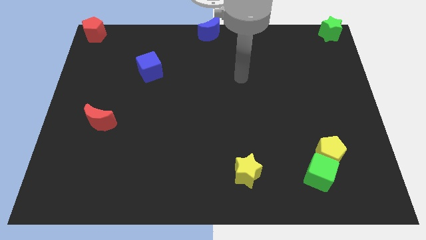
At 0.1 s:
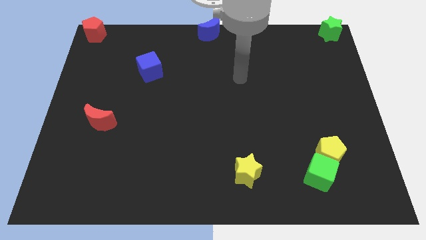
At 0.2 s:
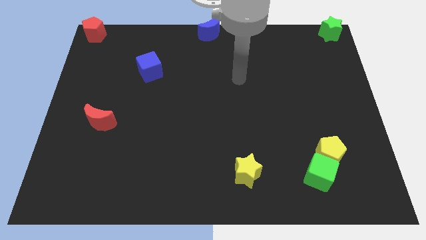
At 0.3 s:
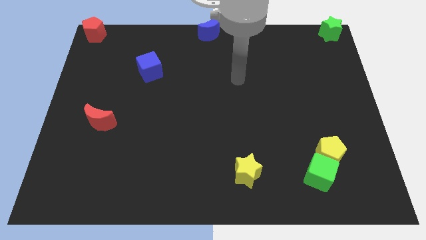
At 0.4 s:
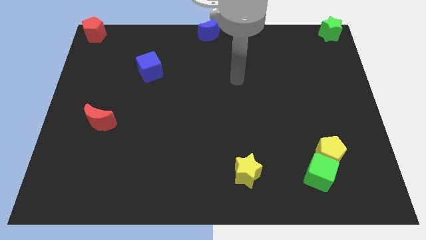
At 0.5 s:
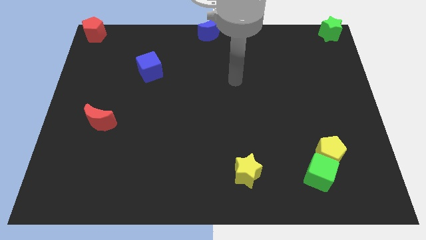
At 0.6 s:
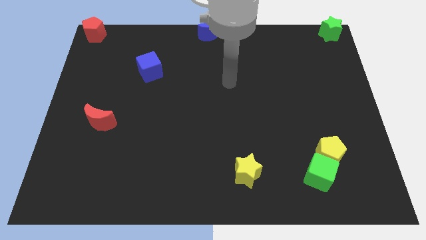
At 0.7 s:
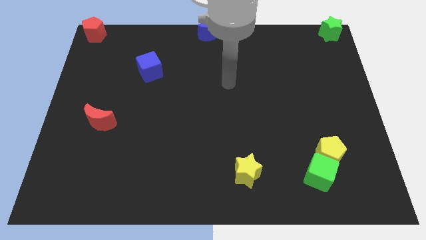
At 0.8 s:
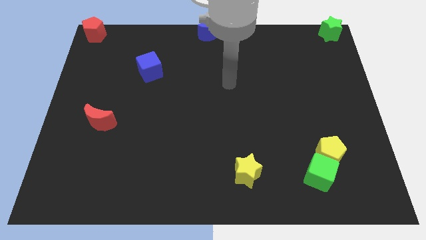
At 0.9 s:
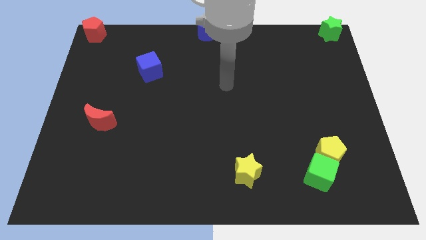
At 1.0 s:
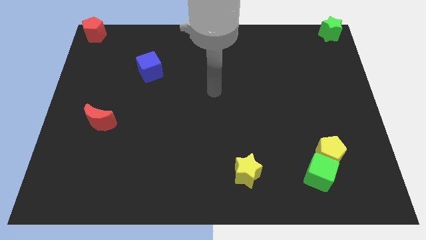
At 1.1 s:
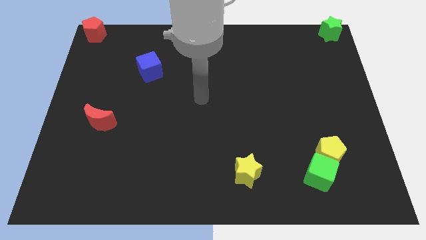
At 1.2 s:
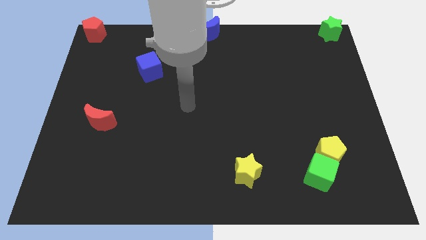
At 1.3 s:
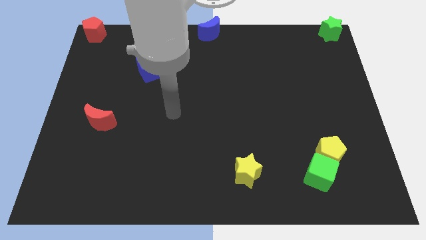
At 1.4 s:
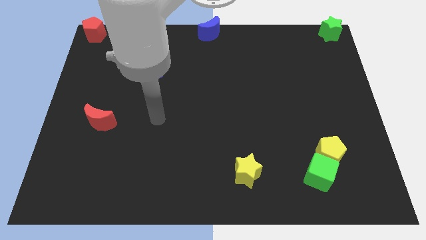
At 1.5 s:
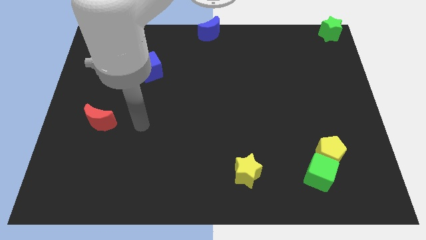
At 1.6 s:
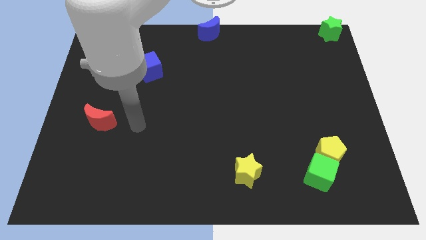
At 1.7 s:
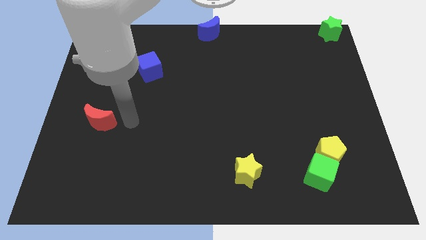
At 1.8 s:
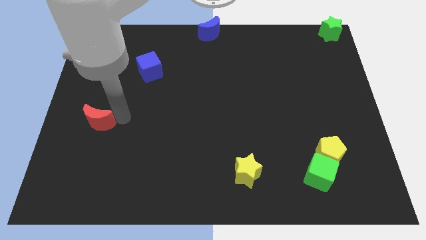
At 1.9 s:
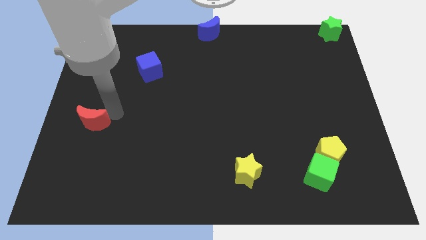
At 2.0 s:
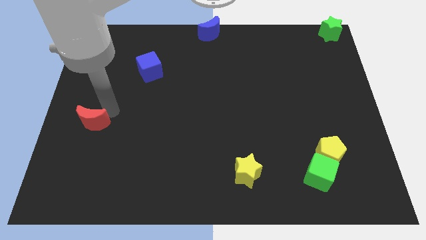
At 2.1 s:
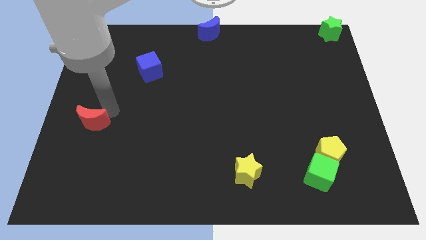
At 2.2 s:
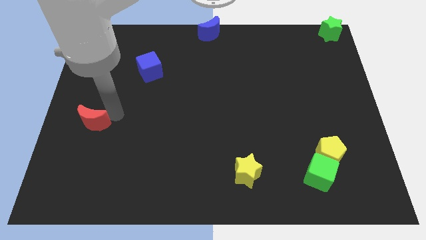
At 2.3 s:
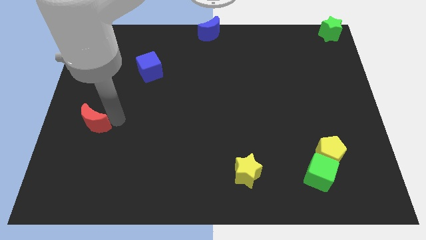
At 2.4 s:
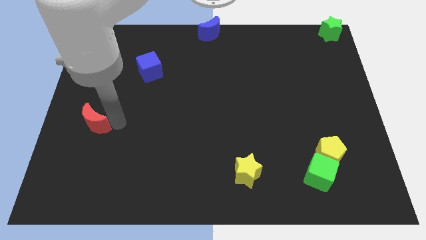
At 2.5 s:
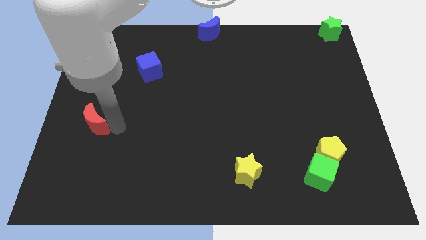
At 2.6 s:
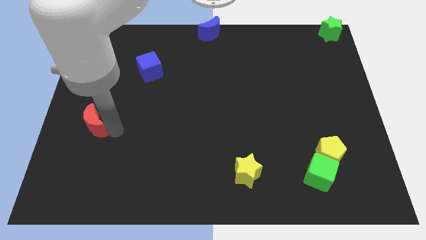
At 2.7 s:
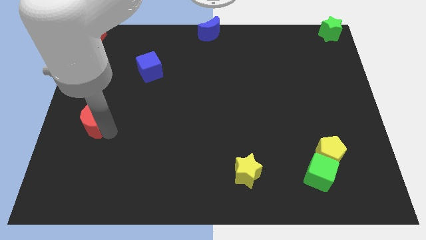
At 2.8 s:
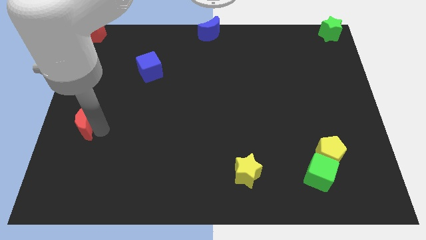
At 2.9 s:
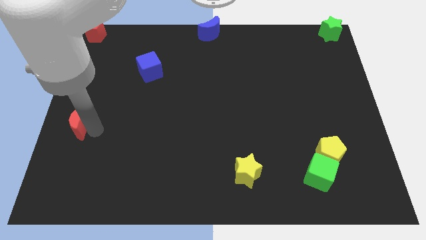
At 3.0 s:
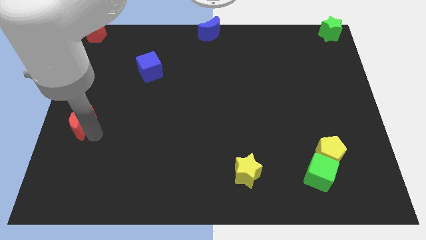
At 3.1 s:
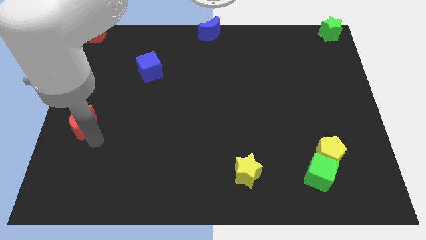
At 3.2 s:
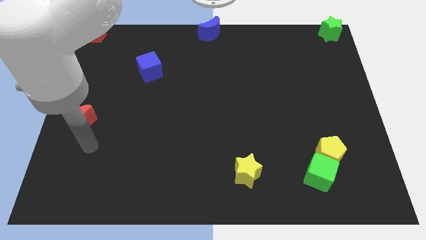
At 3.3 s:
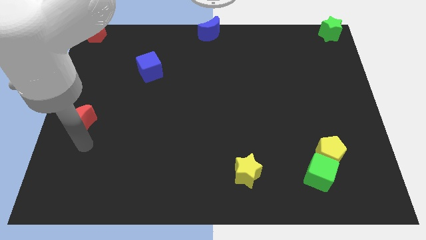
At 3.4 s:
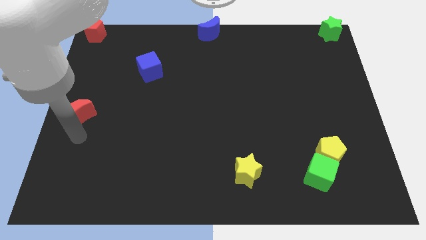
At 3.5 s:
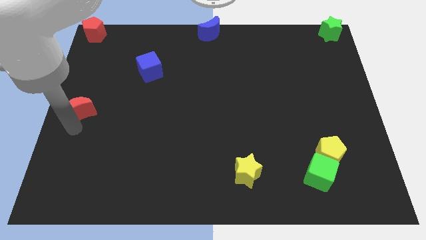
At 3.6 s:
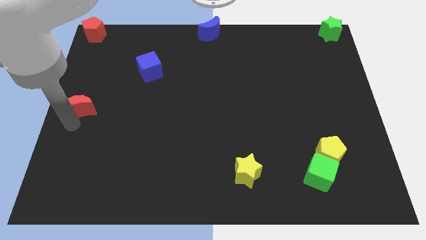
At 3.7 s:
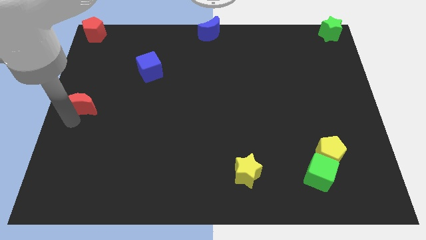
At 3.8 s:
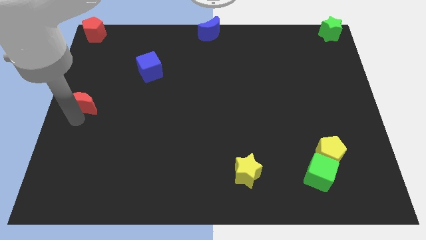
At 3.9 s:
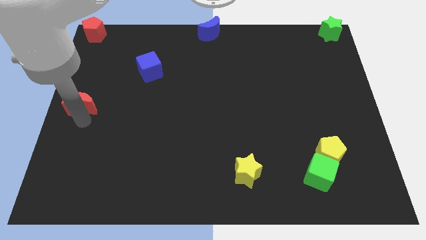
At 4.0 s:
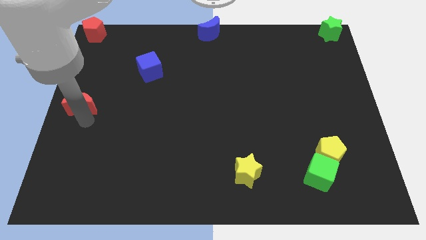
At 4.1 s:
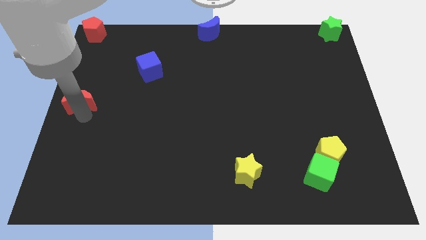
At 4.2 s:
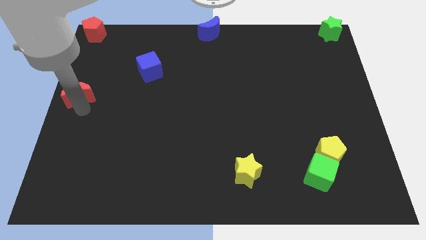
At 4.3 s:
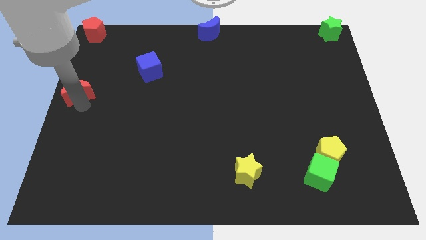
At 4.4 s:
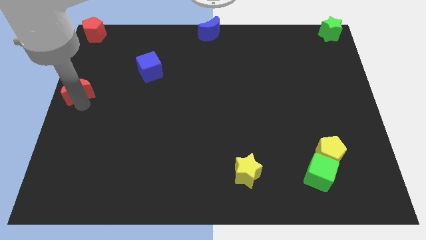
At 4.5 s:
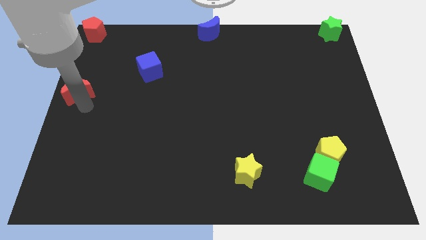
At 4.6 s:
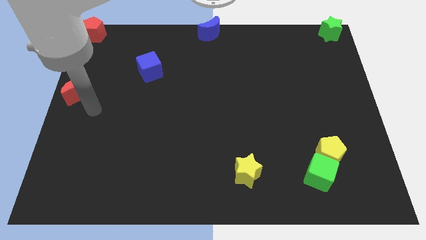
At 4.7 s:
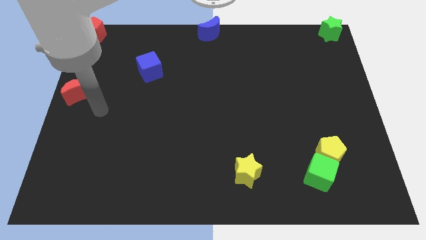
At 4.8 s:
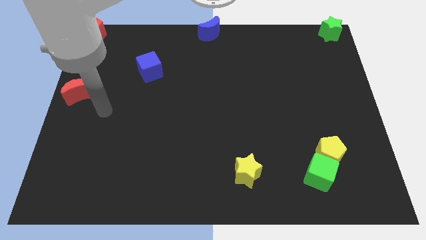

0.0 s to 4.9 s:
move red moon to the left center of the board

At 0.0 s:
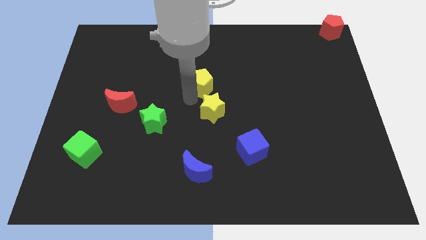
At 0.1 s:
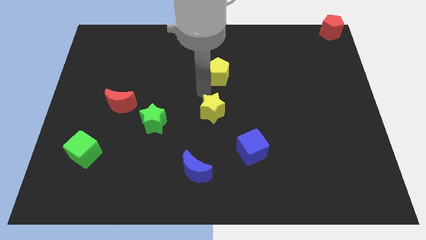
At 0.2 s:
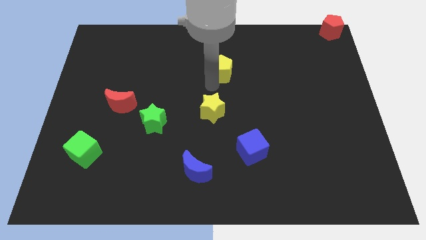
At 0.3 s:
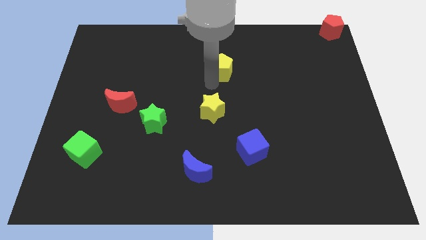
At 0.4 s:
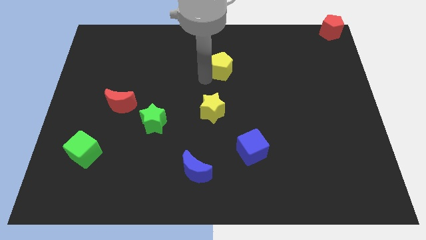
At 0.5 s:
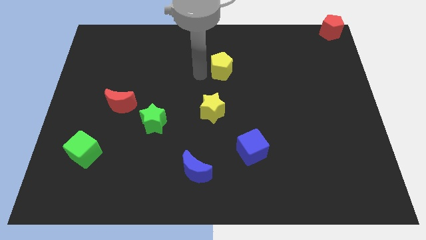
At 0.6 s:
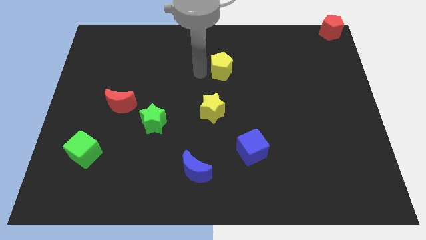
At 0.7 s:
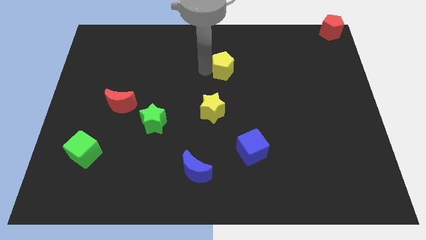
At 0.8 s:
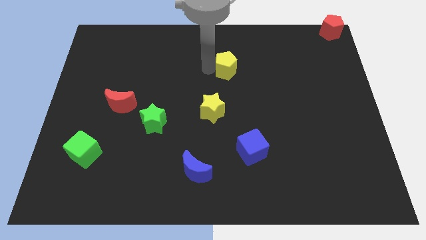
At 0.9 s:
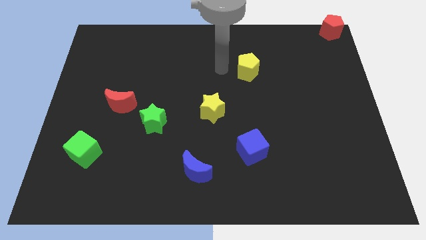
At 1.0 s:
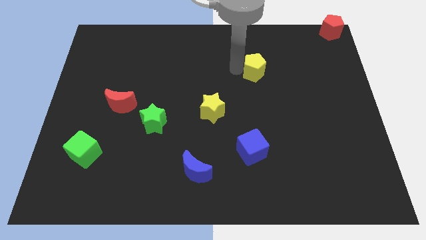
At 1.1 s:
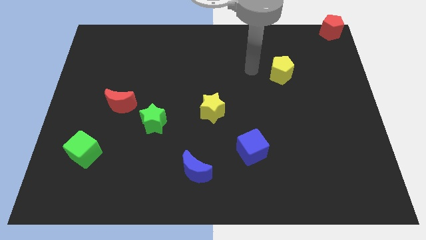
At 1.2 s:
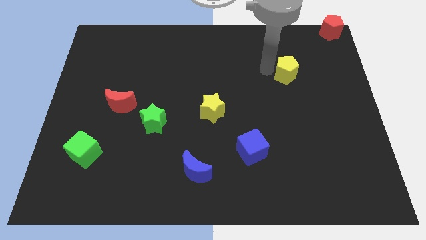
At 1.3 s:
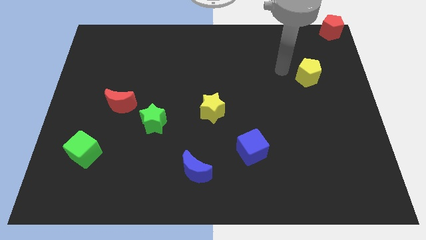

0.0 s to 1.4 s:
push the yellow pentagon to the right side of the table

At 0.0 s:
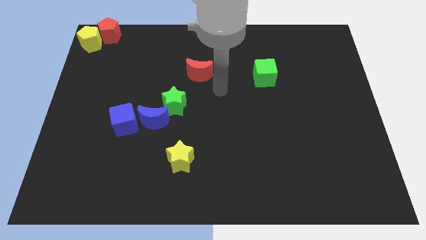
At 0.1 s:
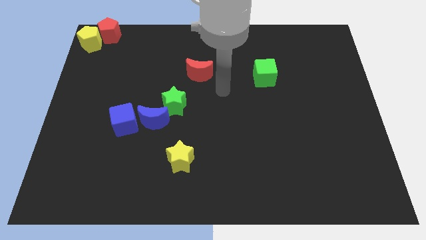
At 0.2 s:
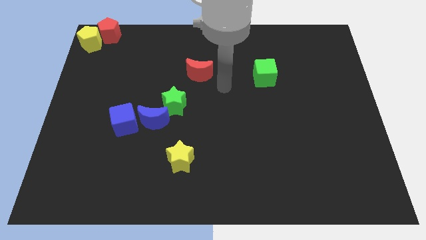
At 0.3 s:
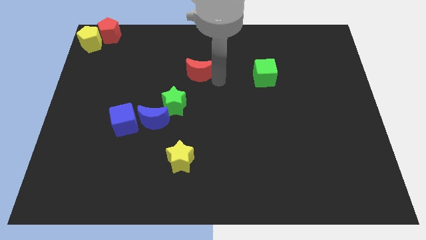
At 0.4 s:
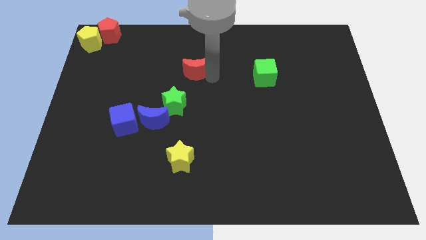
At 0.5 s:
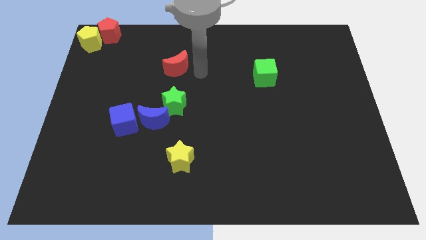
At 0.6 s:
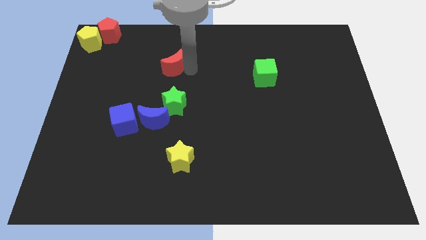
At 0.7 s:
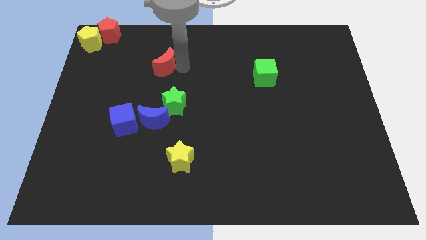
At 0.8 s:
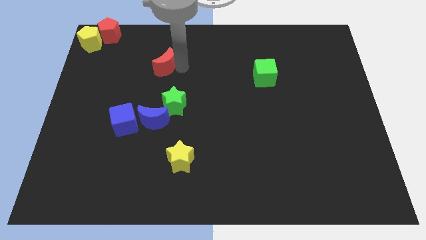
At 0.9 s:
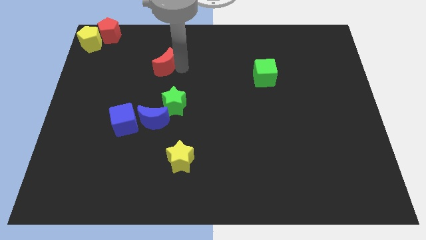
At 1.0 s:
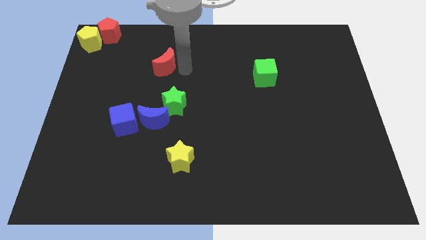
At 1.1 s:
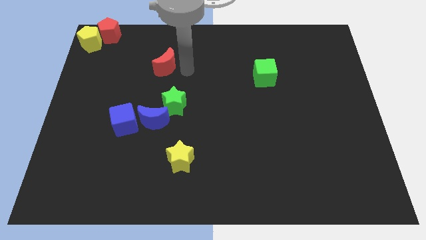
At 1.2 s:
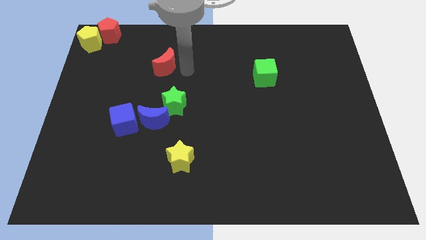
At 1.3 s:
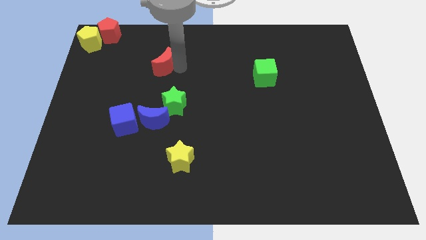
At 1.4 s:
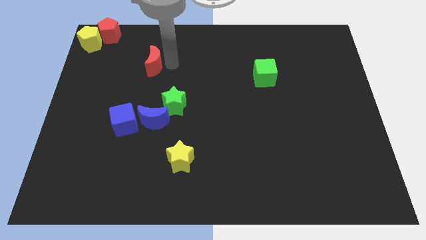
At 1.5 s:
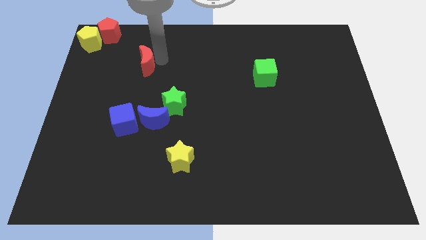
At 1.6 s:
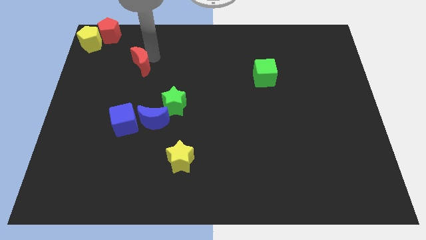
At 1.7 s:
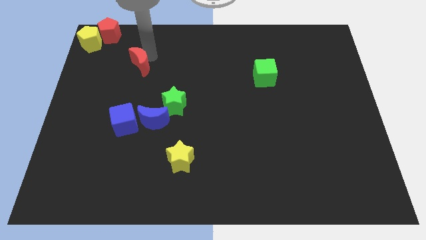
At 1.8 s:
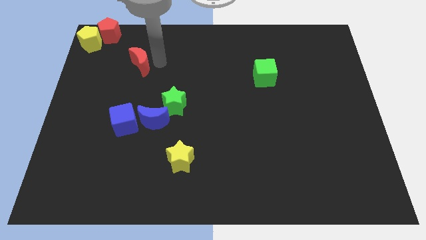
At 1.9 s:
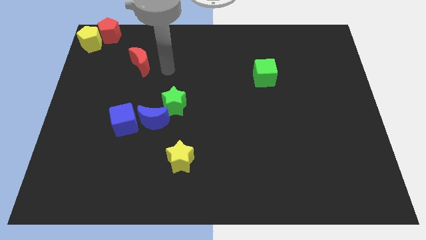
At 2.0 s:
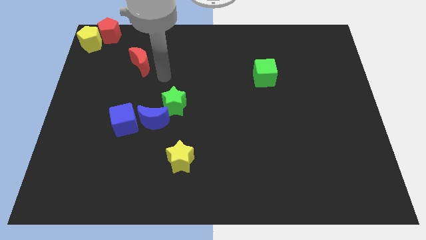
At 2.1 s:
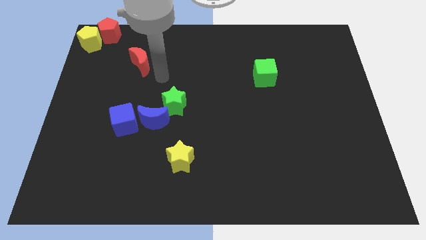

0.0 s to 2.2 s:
move the red crescent towards the top left corner of the board

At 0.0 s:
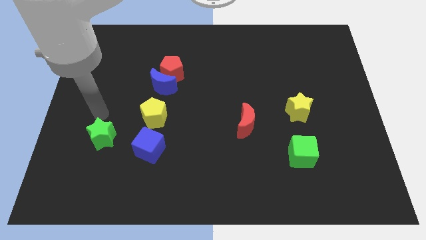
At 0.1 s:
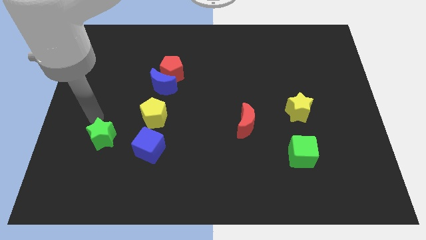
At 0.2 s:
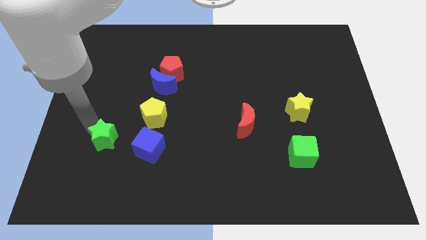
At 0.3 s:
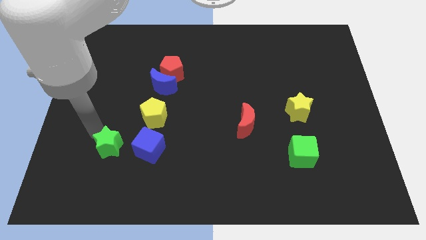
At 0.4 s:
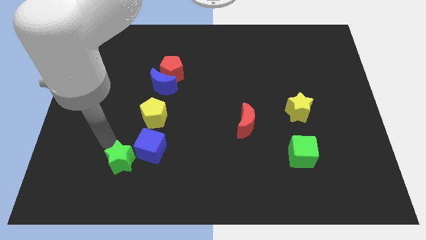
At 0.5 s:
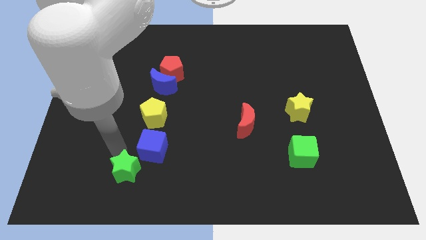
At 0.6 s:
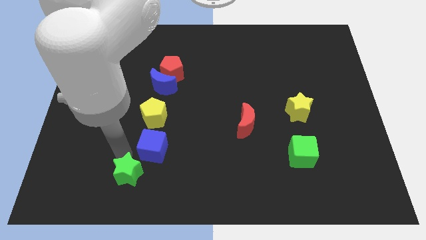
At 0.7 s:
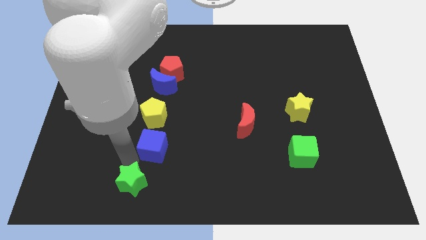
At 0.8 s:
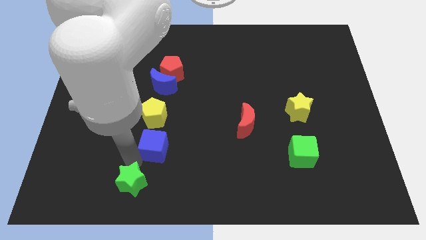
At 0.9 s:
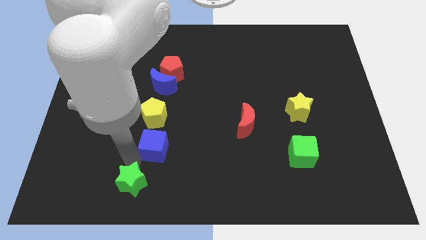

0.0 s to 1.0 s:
push the green star towards the bottom side of the board
